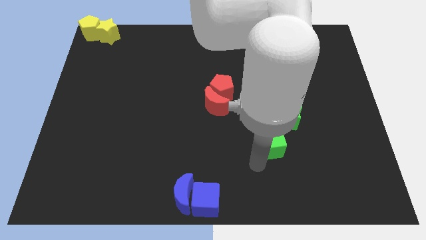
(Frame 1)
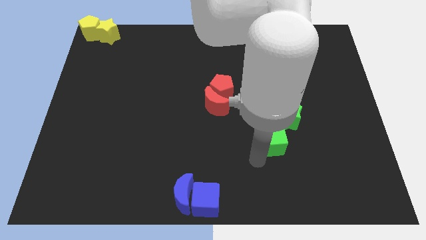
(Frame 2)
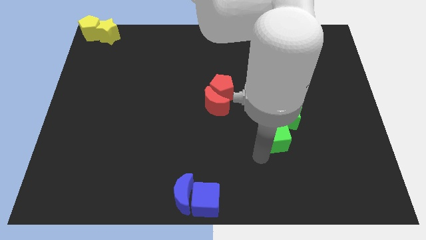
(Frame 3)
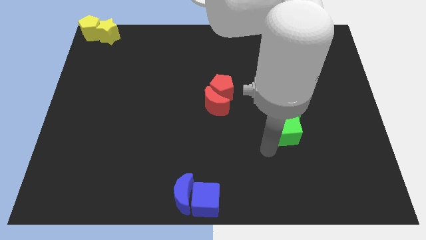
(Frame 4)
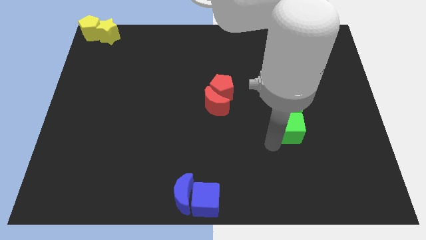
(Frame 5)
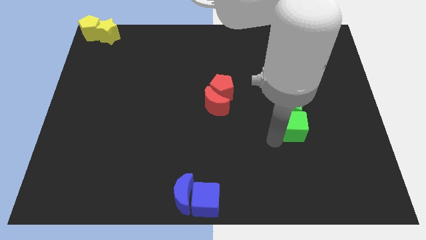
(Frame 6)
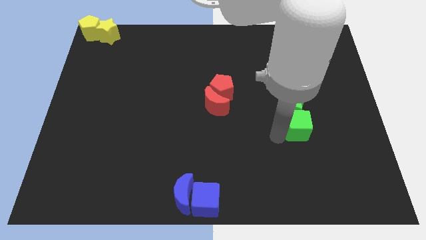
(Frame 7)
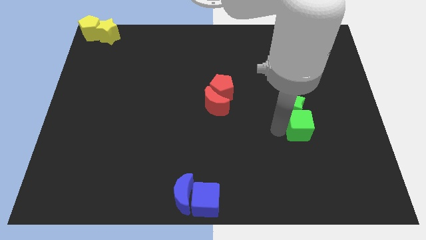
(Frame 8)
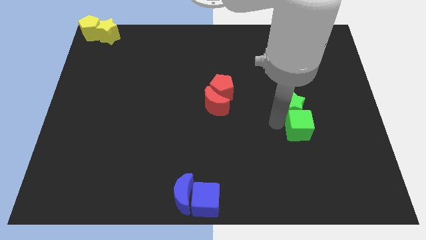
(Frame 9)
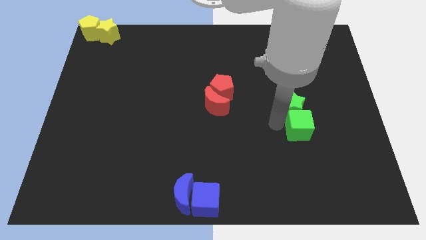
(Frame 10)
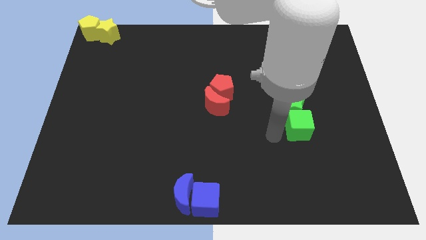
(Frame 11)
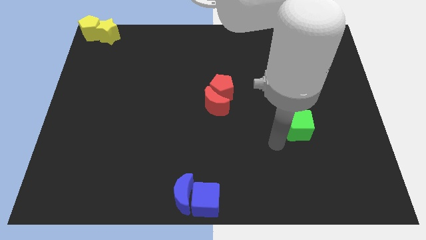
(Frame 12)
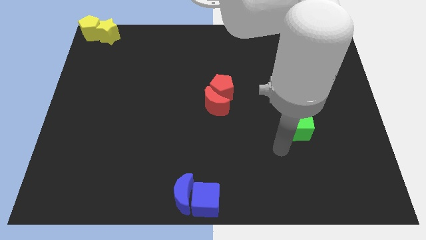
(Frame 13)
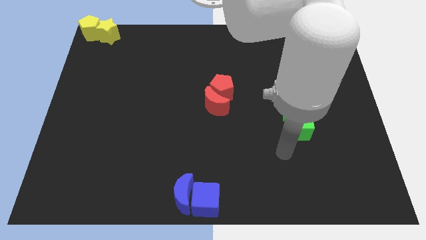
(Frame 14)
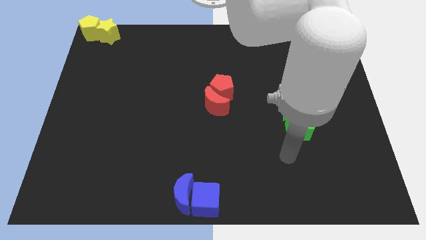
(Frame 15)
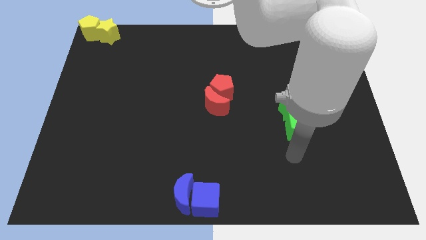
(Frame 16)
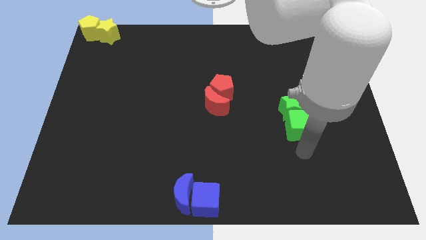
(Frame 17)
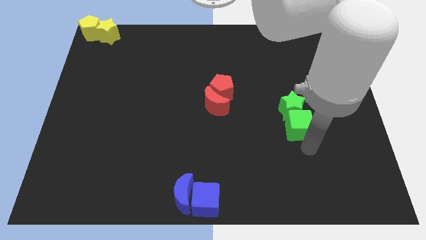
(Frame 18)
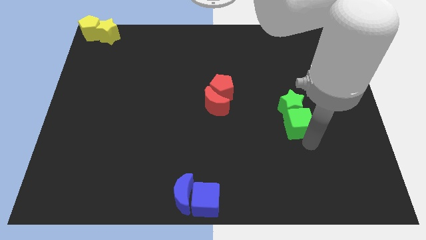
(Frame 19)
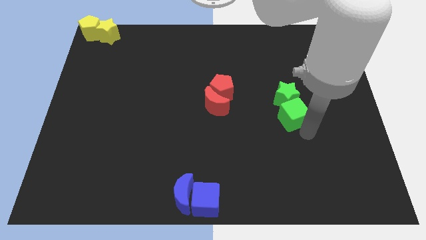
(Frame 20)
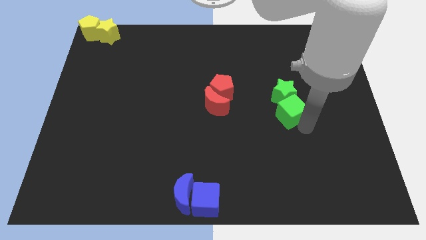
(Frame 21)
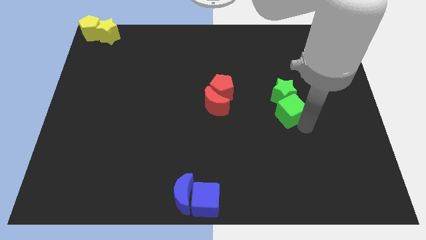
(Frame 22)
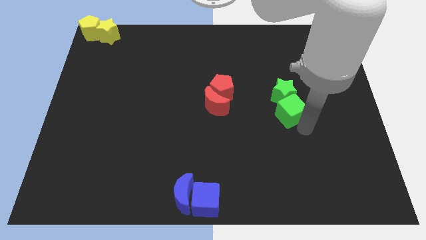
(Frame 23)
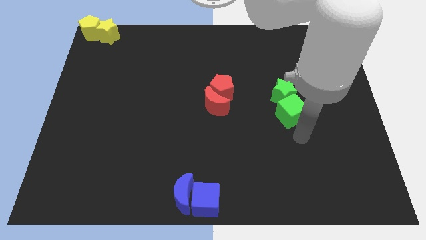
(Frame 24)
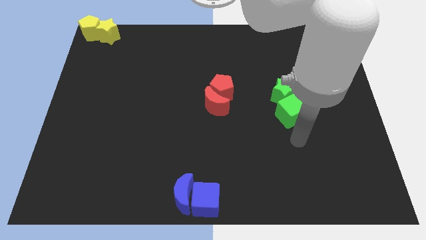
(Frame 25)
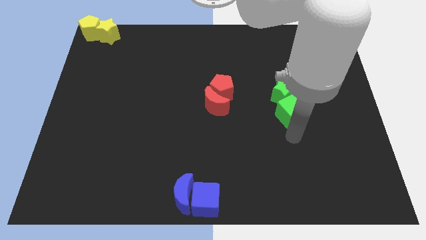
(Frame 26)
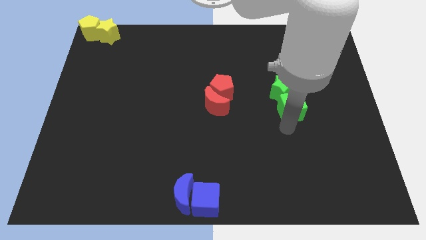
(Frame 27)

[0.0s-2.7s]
push the green cube into the green star

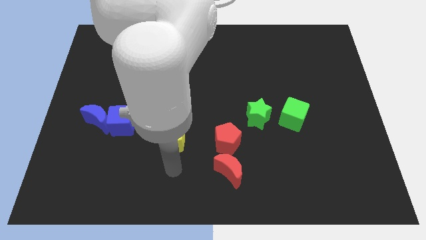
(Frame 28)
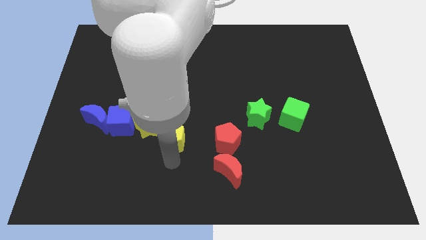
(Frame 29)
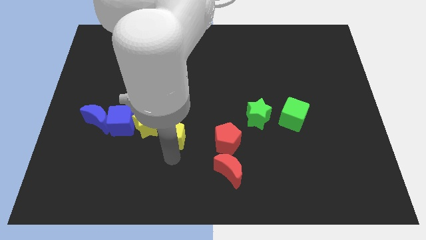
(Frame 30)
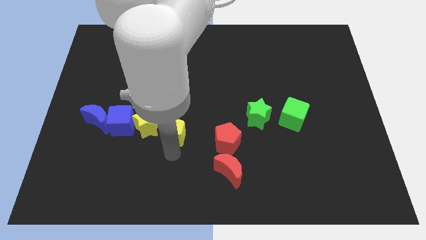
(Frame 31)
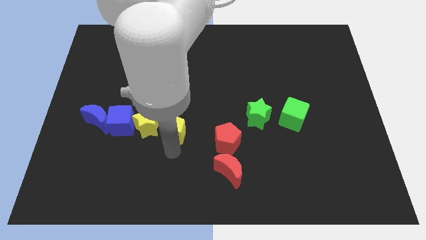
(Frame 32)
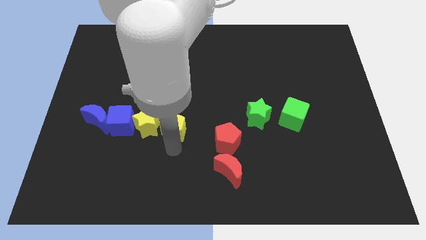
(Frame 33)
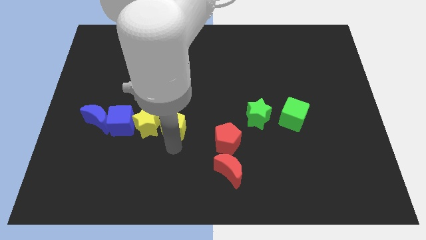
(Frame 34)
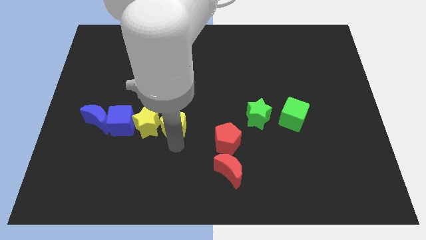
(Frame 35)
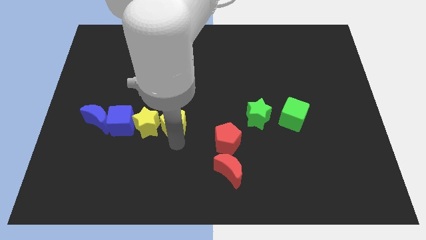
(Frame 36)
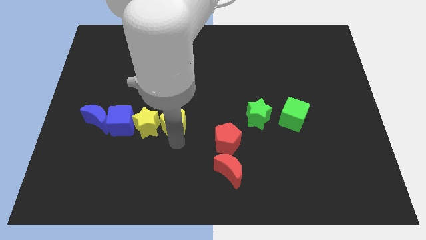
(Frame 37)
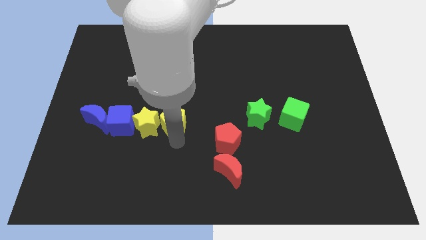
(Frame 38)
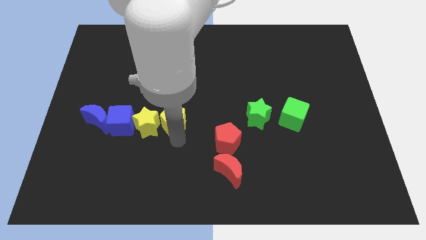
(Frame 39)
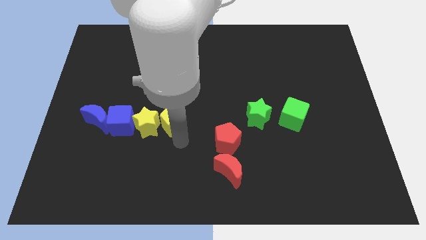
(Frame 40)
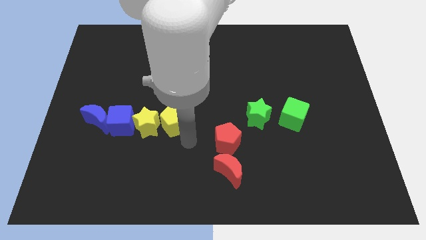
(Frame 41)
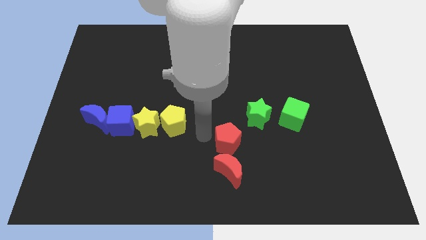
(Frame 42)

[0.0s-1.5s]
push the yellow pentagon right side of the yellow star

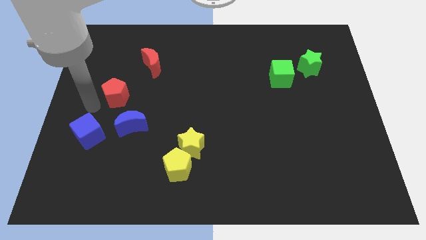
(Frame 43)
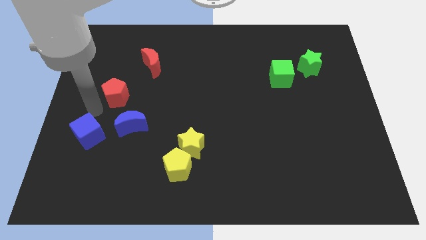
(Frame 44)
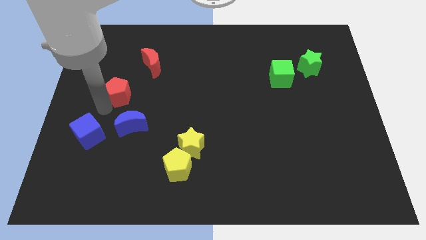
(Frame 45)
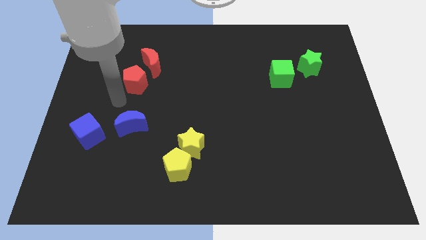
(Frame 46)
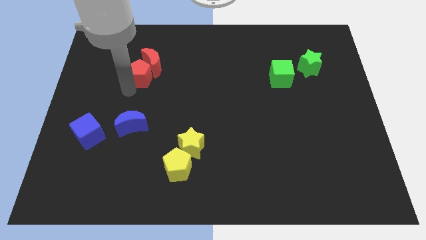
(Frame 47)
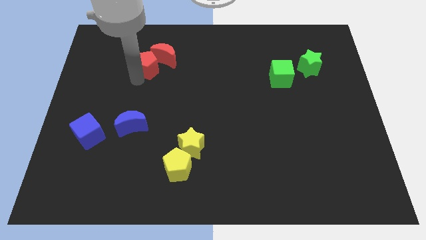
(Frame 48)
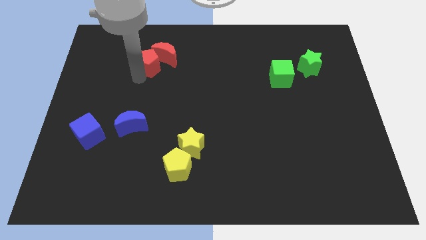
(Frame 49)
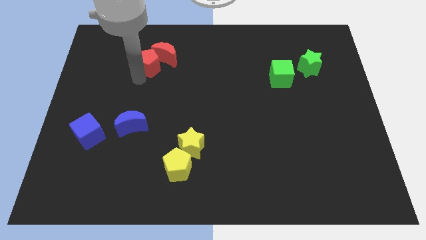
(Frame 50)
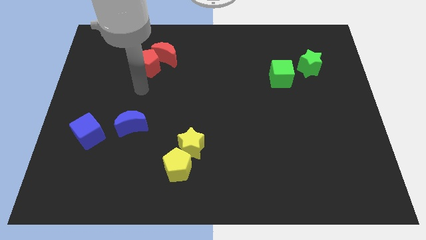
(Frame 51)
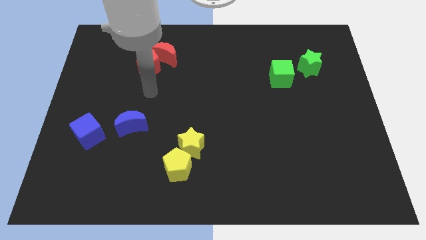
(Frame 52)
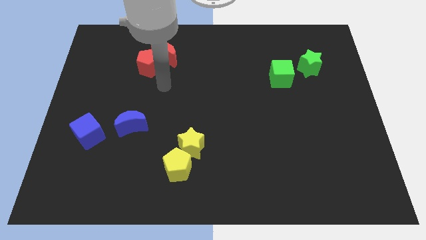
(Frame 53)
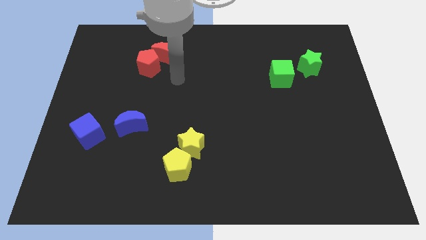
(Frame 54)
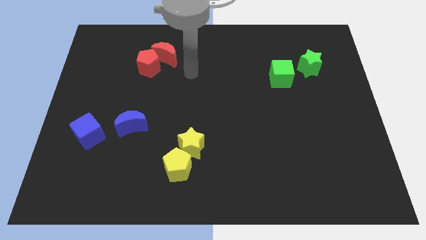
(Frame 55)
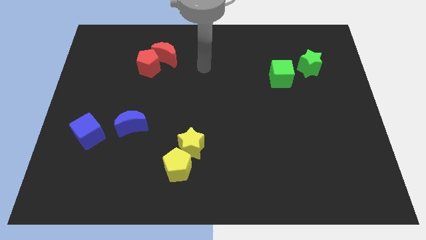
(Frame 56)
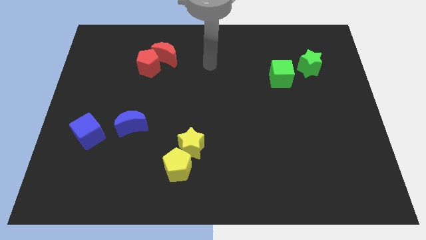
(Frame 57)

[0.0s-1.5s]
place red pentagon close to red crescent

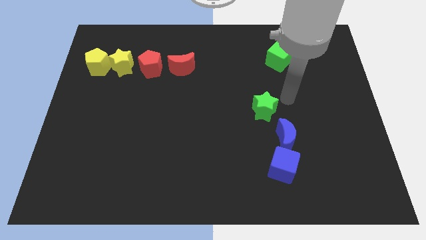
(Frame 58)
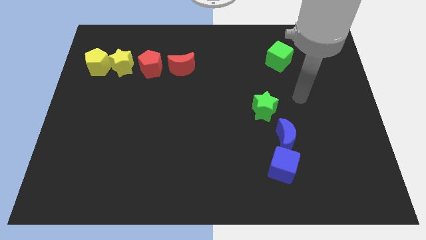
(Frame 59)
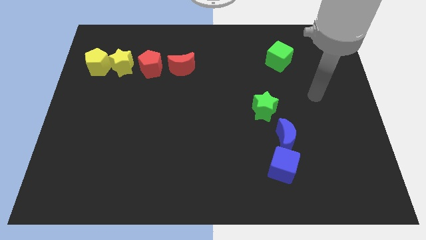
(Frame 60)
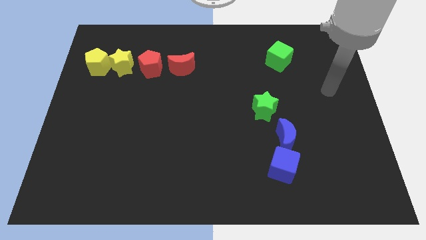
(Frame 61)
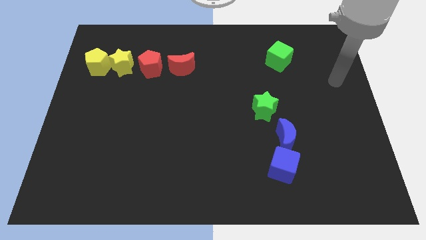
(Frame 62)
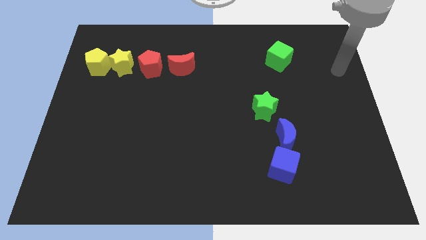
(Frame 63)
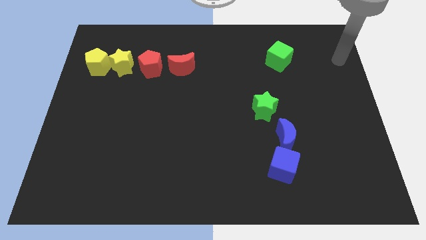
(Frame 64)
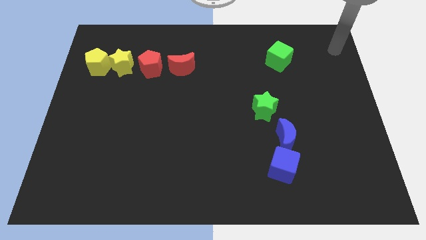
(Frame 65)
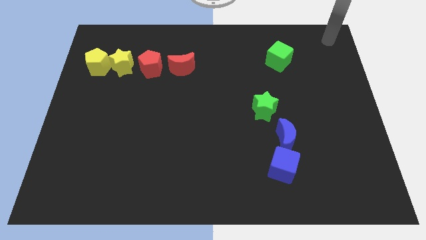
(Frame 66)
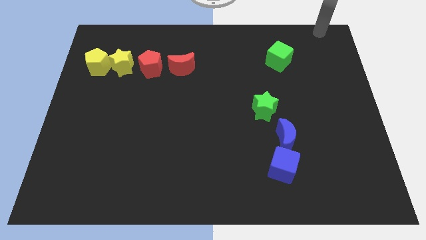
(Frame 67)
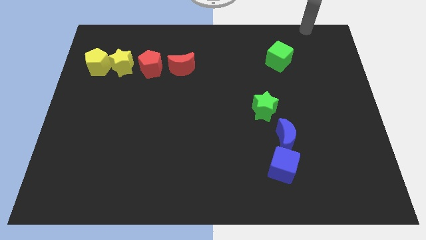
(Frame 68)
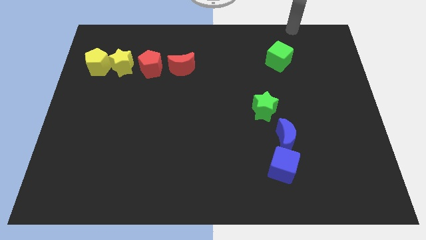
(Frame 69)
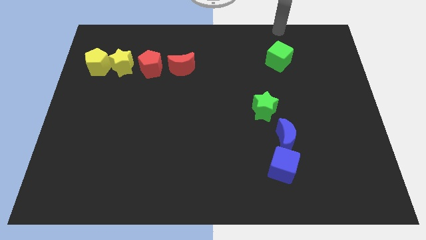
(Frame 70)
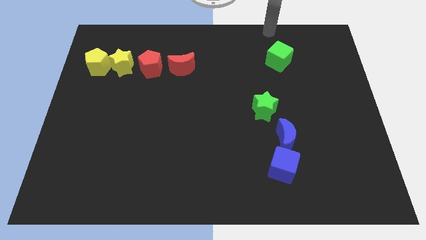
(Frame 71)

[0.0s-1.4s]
move your arm away from the green star

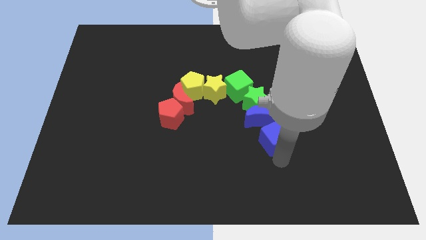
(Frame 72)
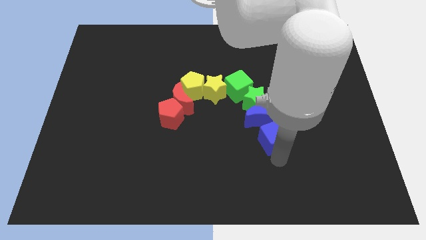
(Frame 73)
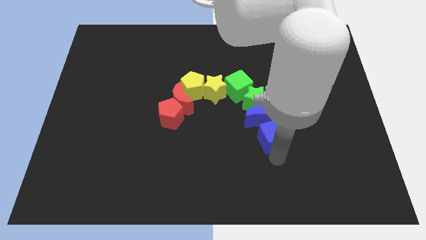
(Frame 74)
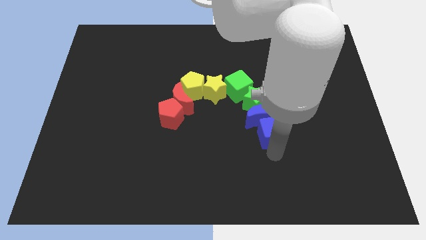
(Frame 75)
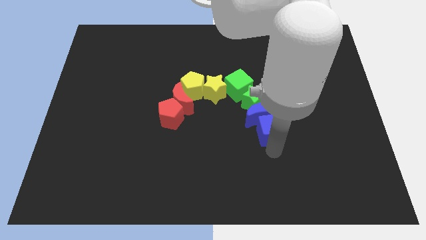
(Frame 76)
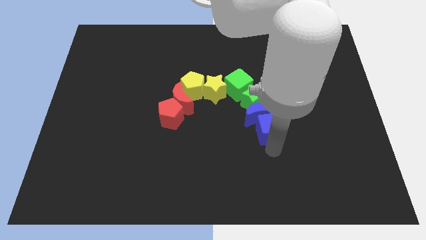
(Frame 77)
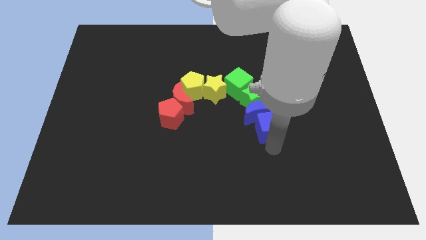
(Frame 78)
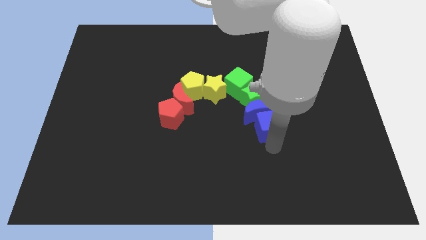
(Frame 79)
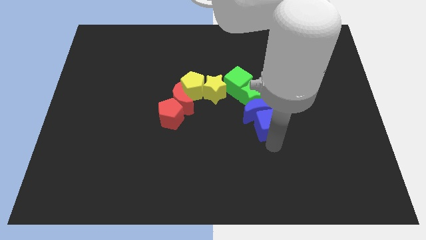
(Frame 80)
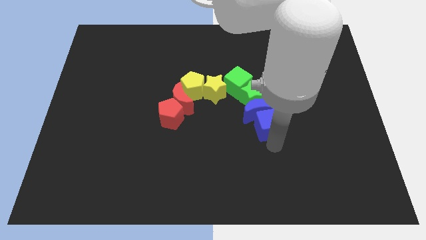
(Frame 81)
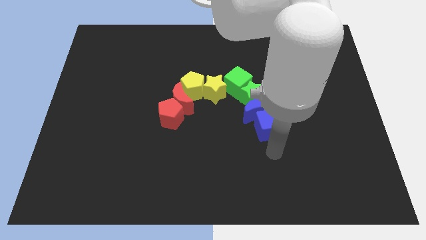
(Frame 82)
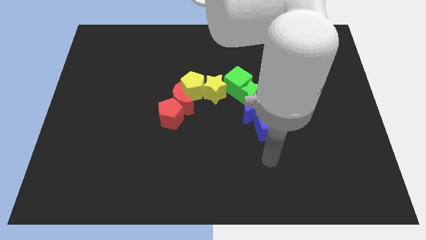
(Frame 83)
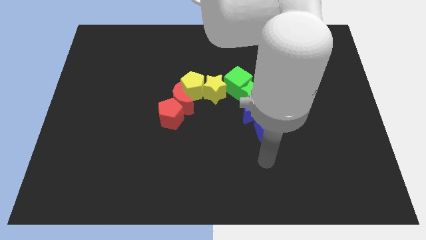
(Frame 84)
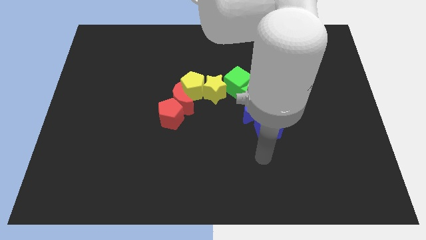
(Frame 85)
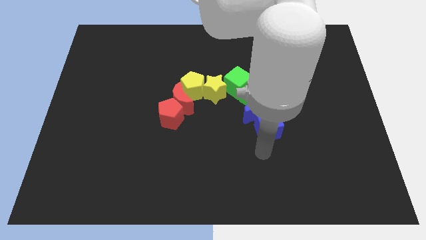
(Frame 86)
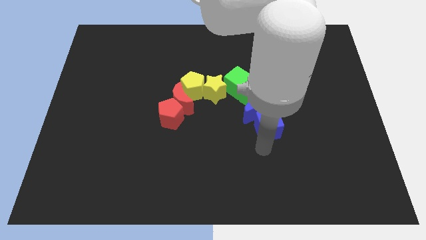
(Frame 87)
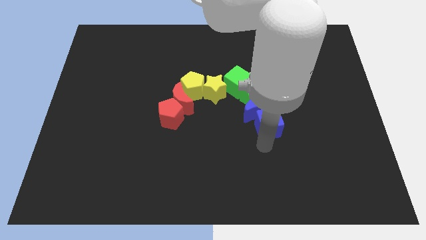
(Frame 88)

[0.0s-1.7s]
move the blue cube to the bottom of the blue crescent on the board

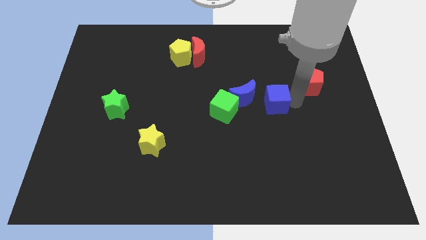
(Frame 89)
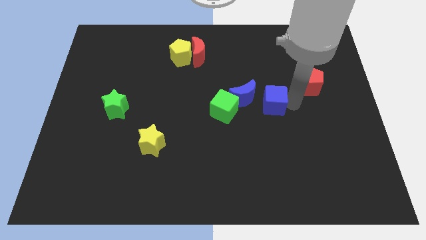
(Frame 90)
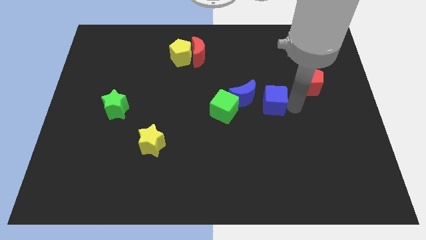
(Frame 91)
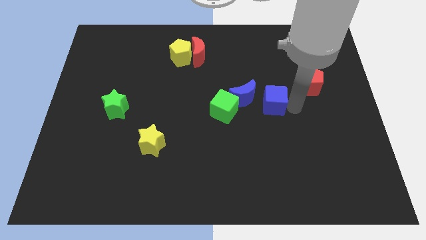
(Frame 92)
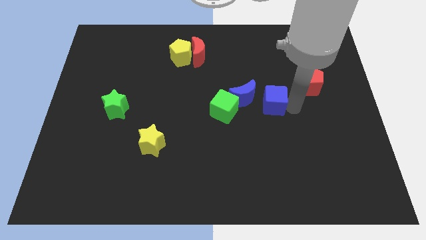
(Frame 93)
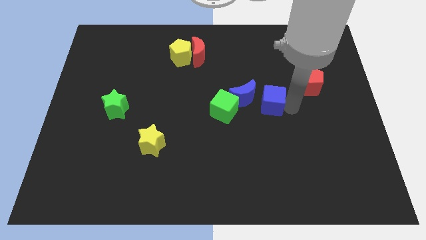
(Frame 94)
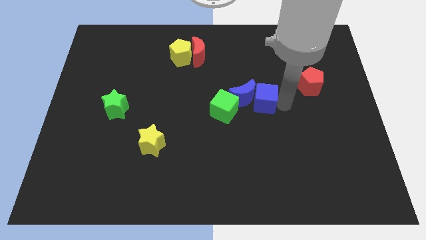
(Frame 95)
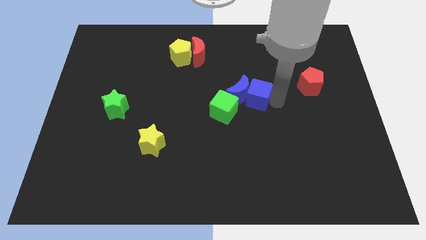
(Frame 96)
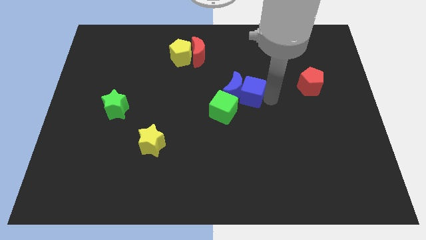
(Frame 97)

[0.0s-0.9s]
push blue cube into blue moon
